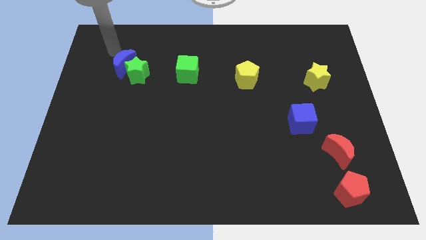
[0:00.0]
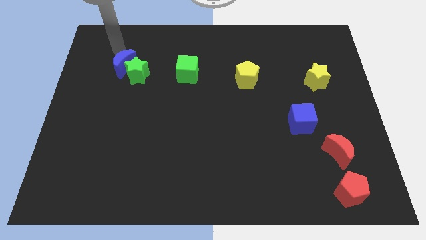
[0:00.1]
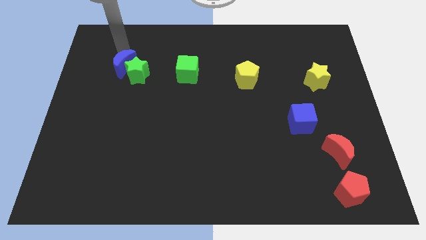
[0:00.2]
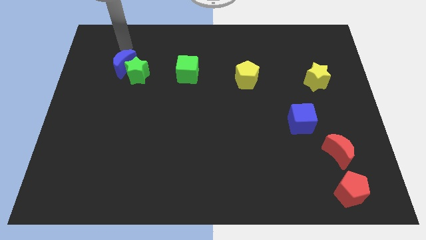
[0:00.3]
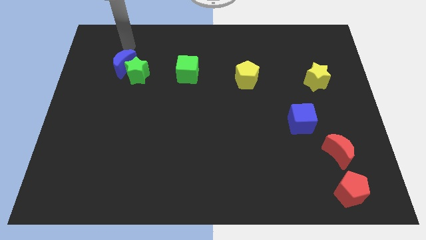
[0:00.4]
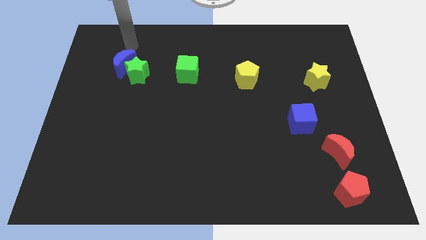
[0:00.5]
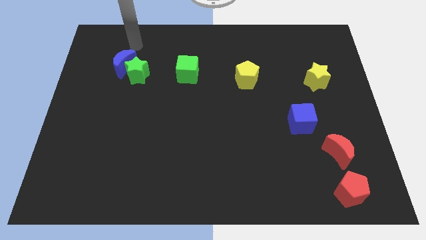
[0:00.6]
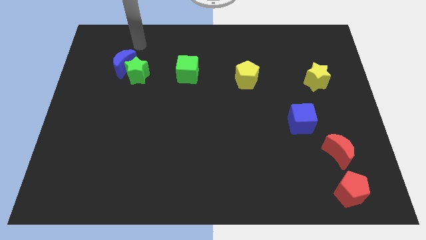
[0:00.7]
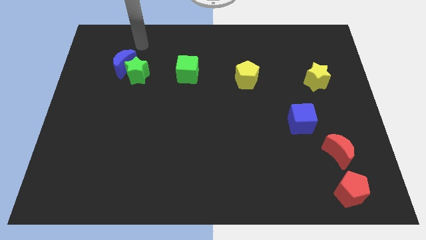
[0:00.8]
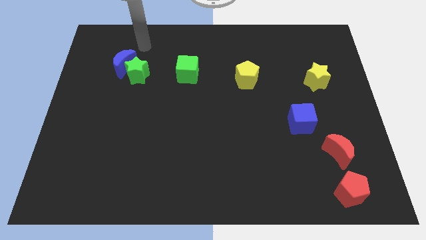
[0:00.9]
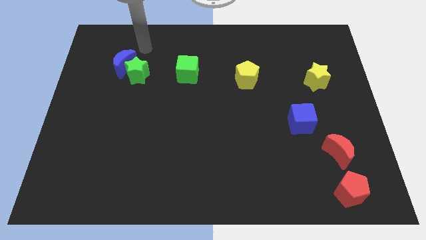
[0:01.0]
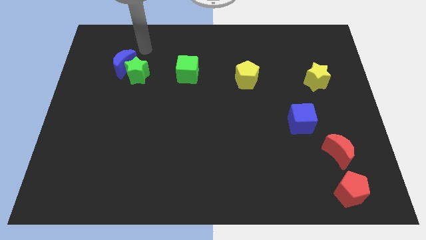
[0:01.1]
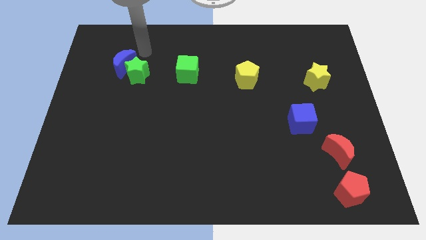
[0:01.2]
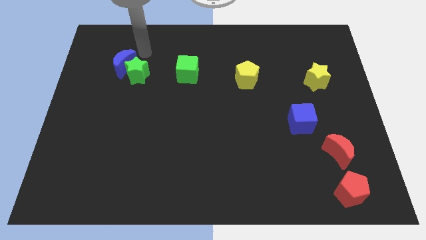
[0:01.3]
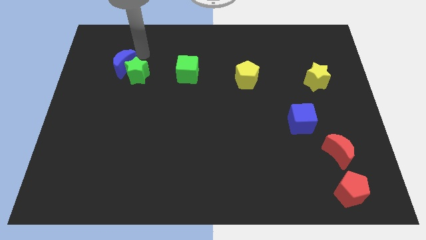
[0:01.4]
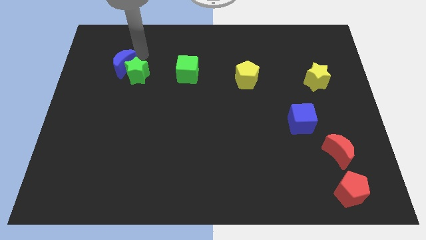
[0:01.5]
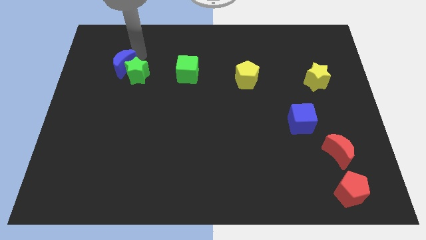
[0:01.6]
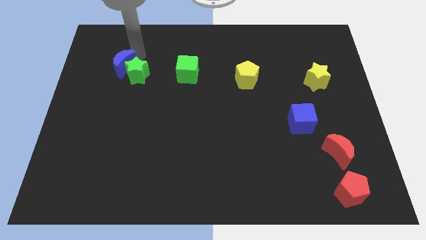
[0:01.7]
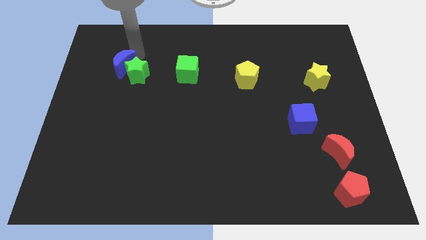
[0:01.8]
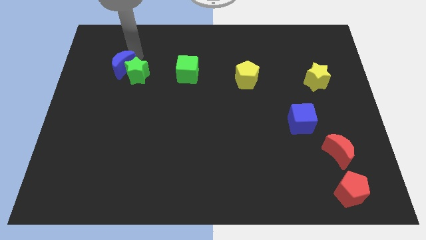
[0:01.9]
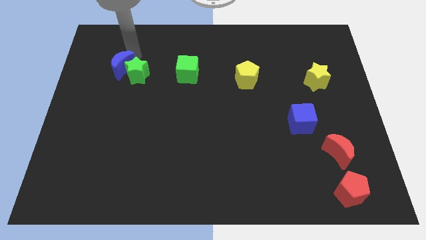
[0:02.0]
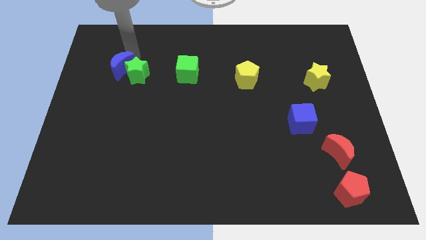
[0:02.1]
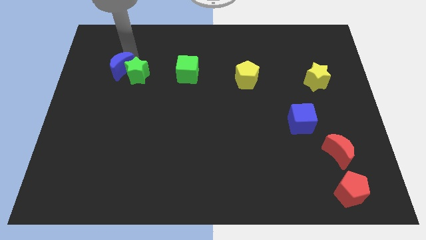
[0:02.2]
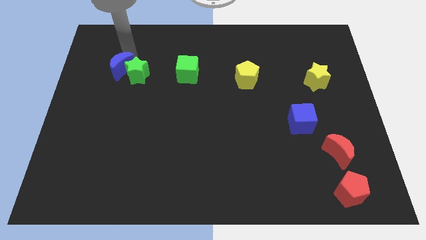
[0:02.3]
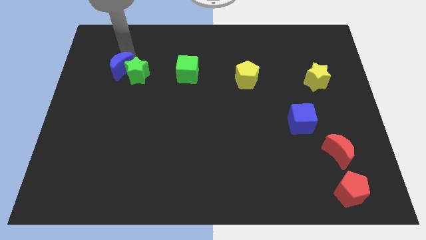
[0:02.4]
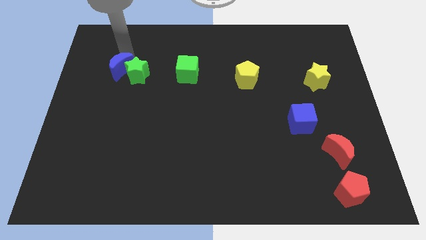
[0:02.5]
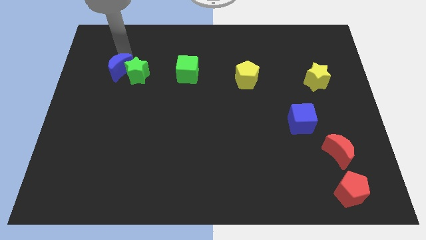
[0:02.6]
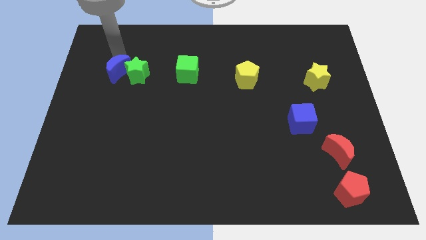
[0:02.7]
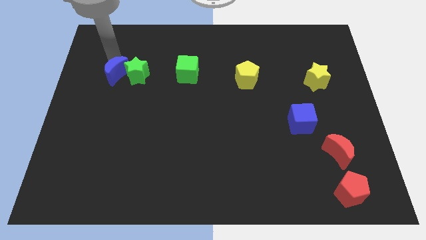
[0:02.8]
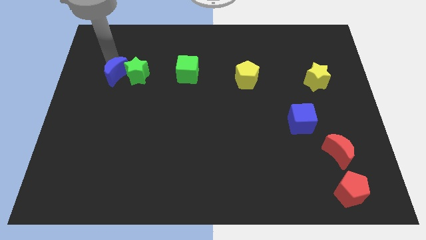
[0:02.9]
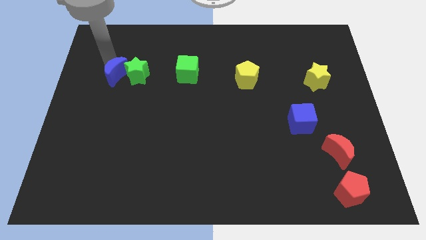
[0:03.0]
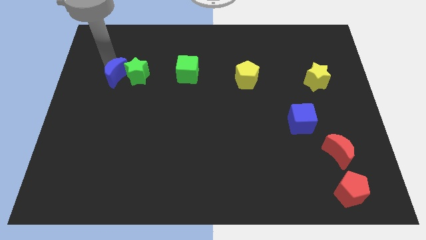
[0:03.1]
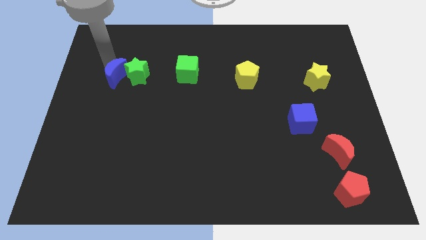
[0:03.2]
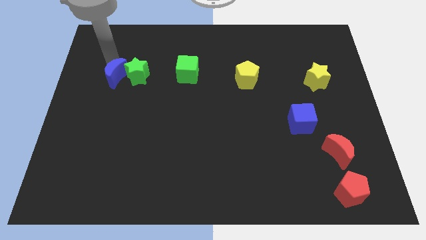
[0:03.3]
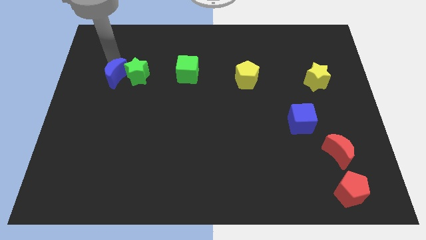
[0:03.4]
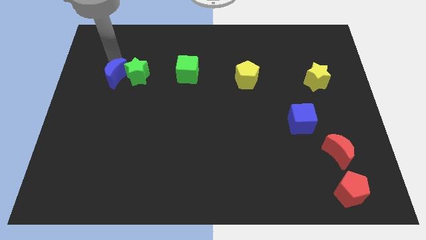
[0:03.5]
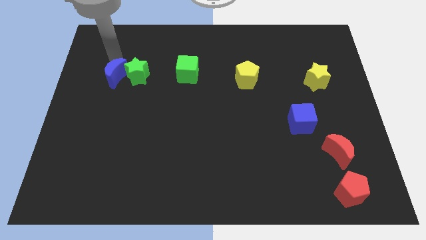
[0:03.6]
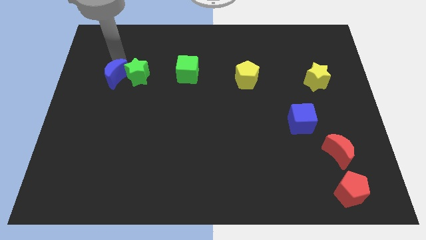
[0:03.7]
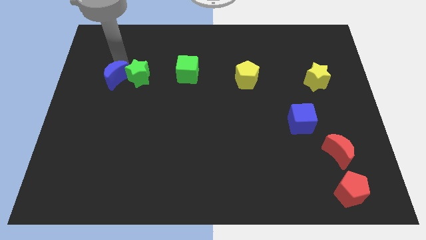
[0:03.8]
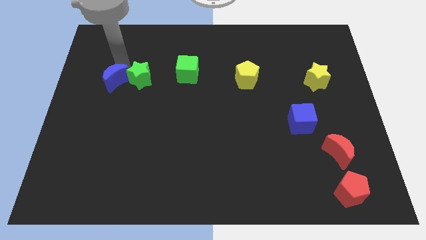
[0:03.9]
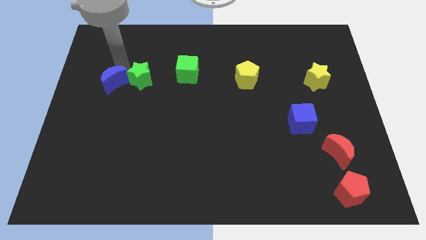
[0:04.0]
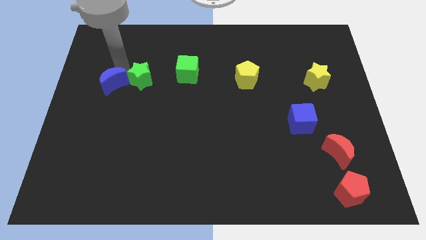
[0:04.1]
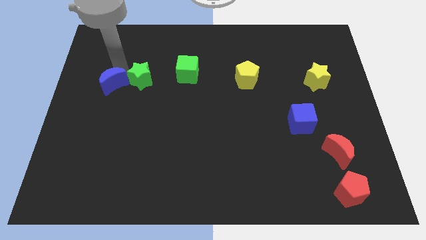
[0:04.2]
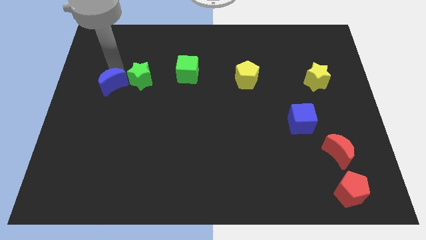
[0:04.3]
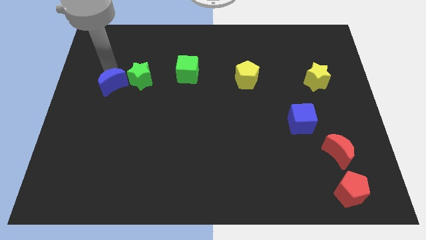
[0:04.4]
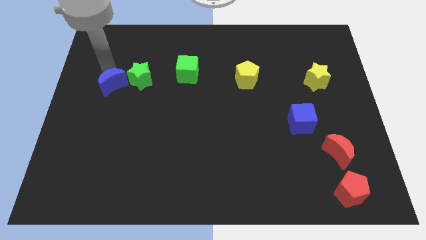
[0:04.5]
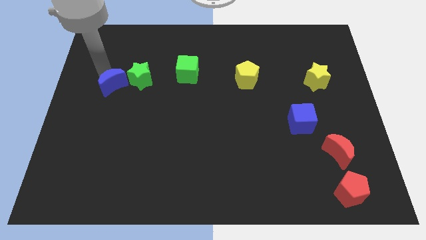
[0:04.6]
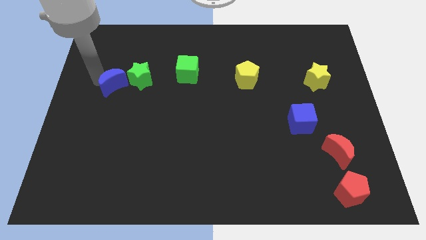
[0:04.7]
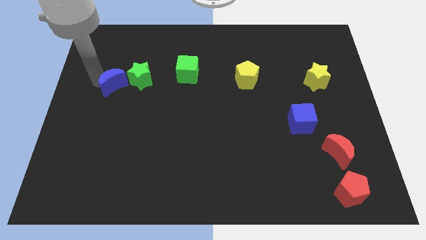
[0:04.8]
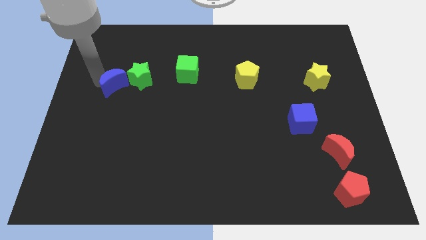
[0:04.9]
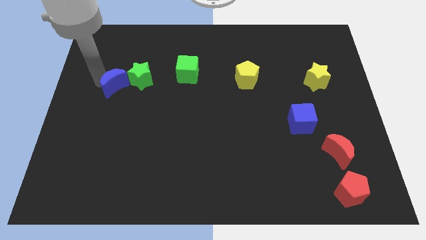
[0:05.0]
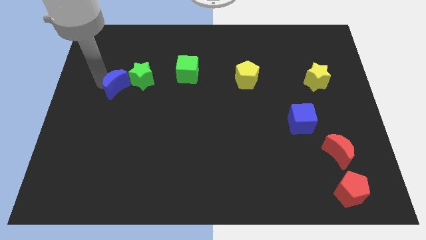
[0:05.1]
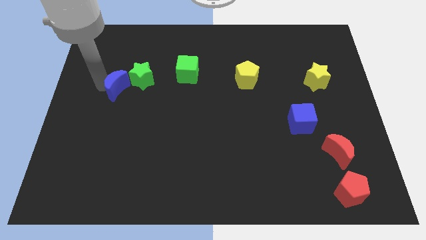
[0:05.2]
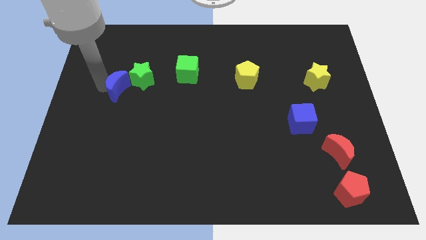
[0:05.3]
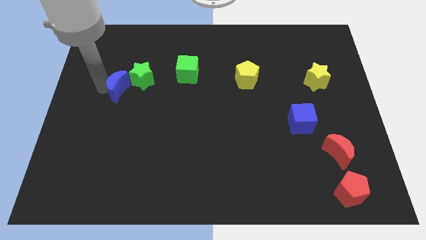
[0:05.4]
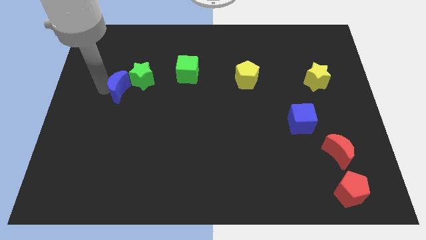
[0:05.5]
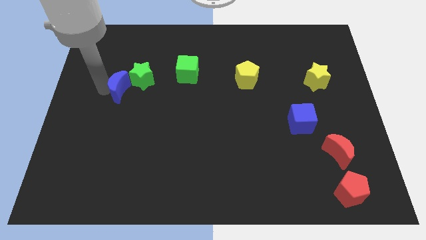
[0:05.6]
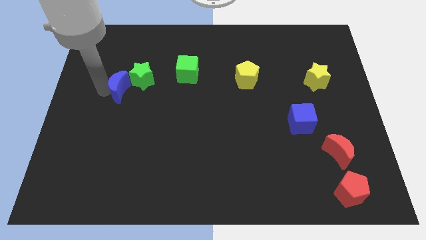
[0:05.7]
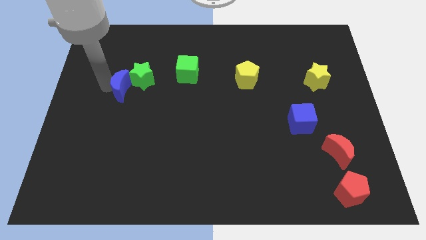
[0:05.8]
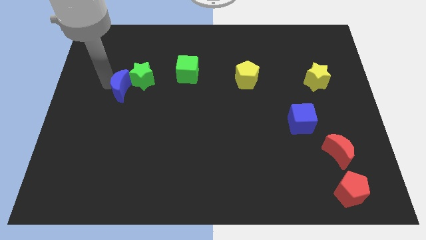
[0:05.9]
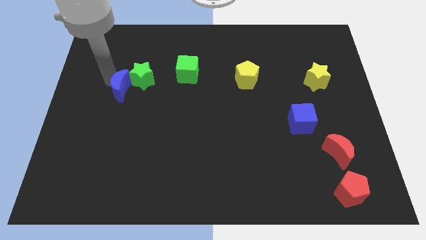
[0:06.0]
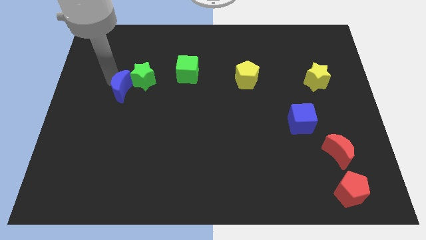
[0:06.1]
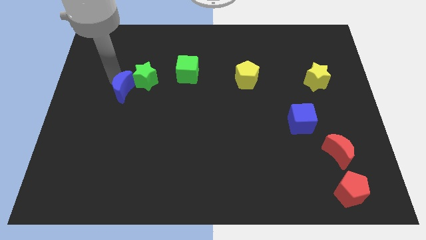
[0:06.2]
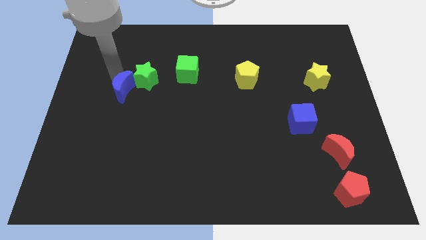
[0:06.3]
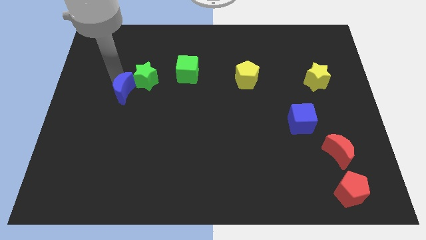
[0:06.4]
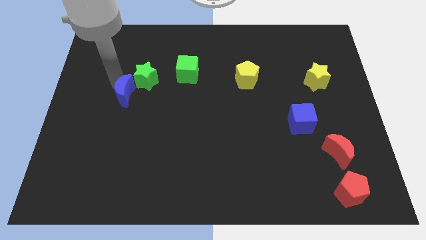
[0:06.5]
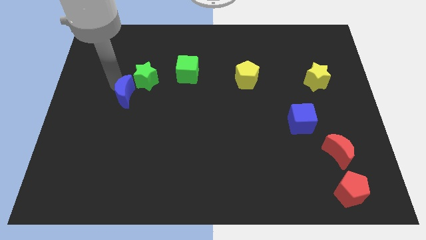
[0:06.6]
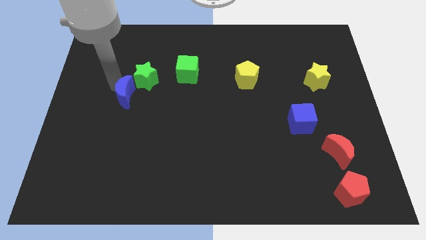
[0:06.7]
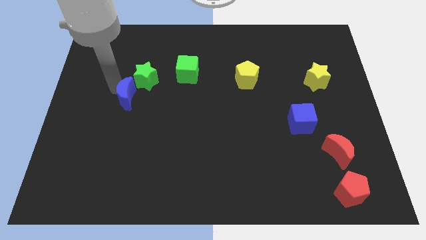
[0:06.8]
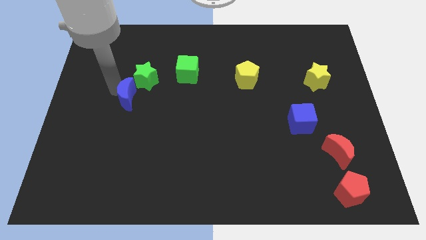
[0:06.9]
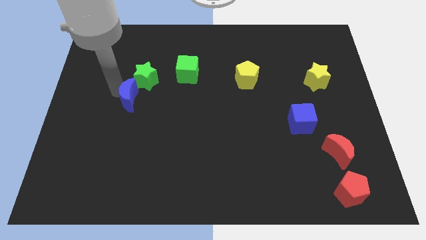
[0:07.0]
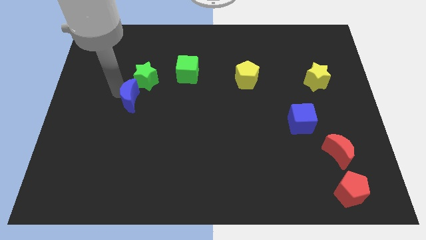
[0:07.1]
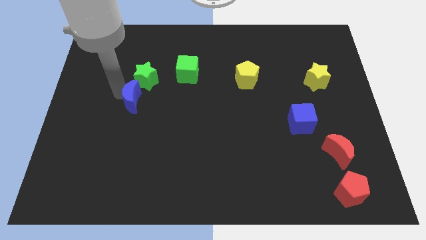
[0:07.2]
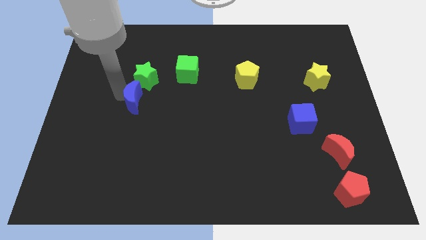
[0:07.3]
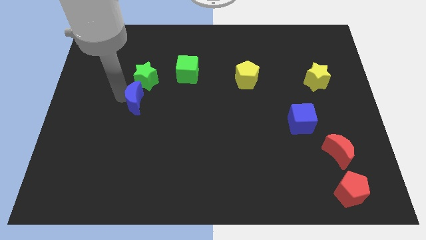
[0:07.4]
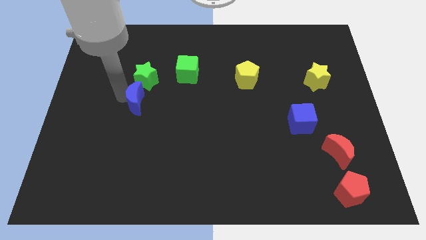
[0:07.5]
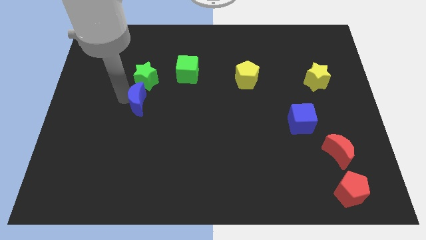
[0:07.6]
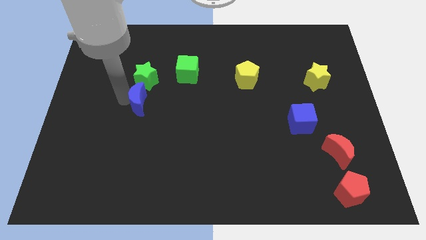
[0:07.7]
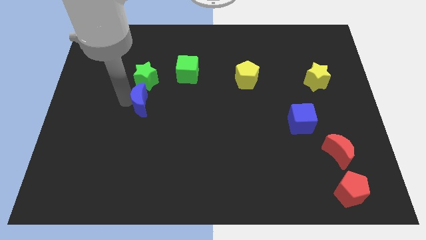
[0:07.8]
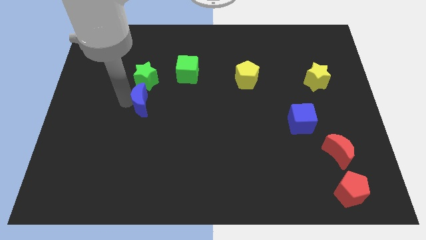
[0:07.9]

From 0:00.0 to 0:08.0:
place the blue moon vertically below the green star

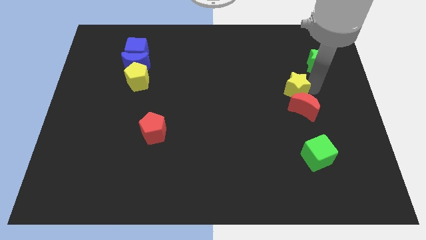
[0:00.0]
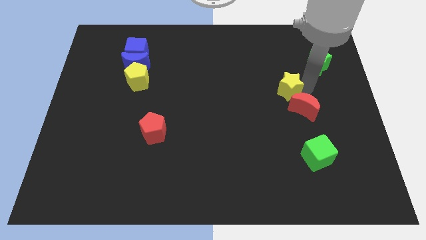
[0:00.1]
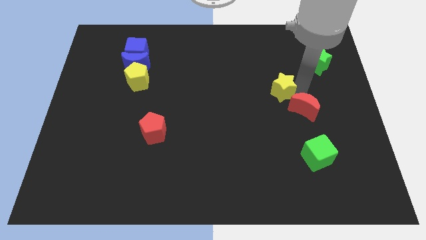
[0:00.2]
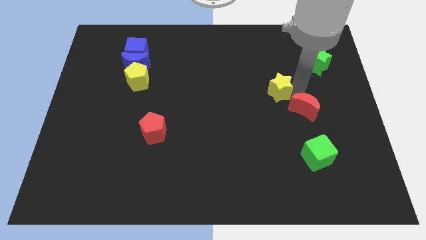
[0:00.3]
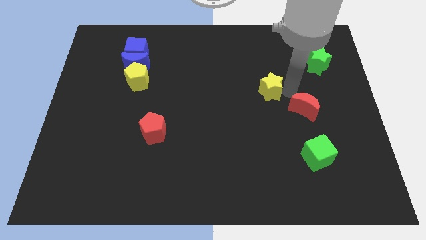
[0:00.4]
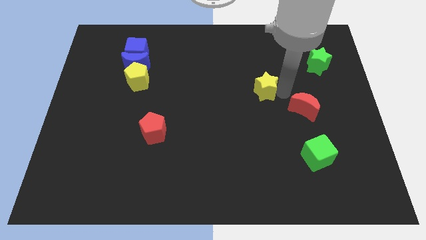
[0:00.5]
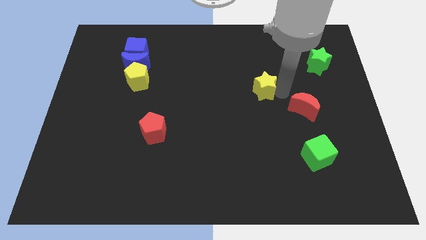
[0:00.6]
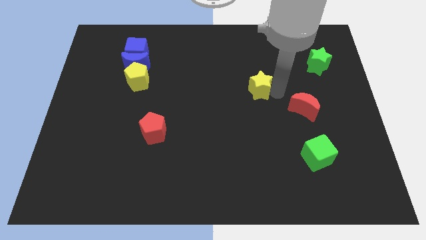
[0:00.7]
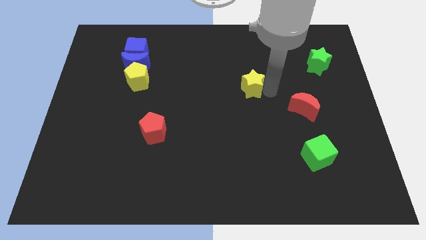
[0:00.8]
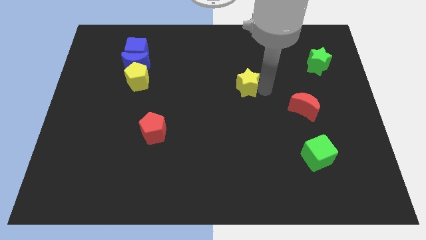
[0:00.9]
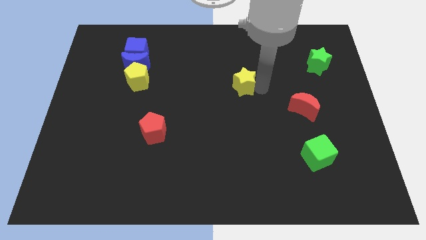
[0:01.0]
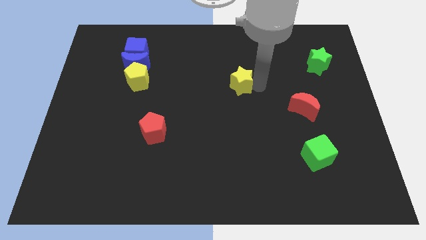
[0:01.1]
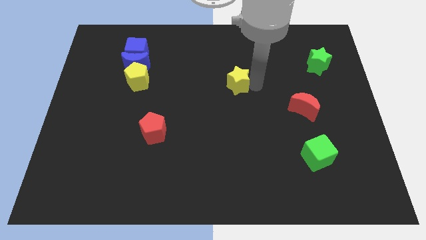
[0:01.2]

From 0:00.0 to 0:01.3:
push the yellow star to the top left of the red crescent
